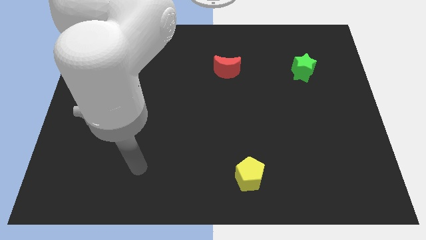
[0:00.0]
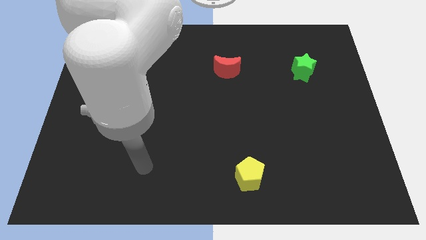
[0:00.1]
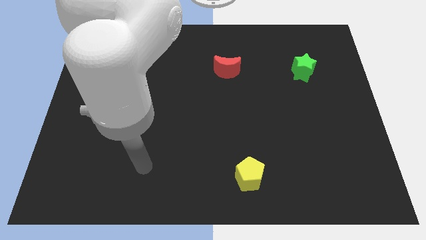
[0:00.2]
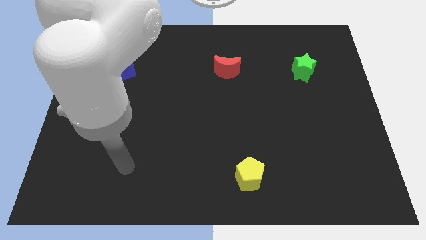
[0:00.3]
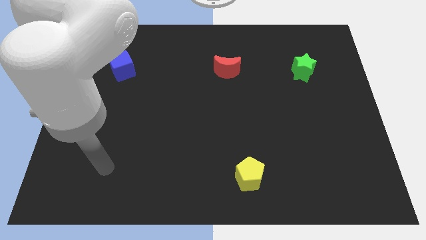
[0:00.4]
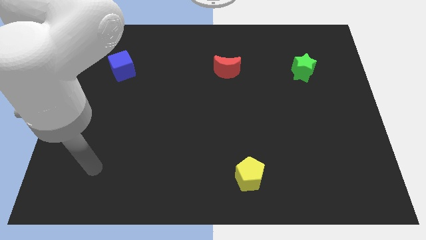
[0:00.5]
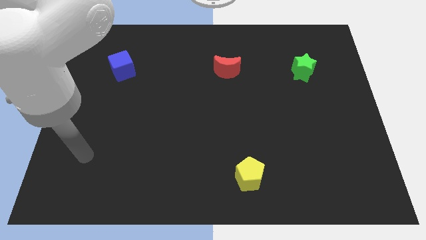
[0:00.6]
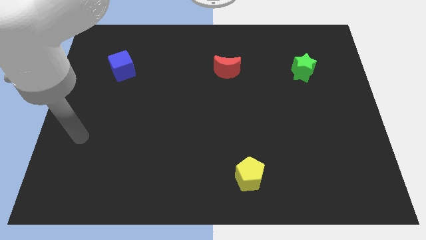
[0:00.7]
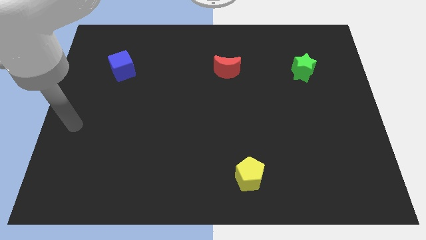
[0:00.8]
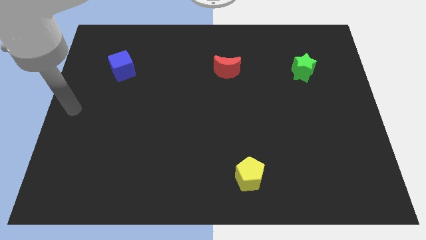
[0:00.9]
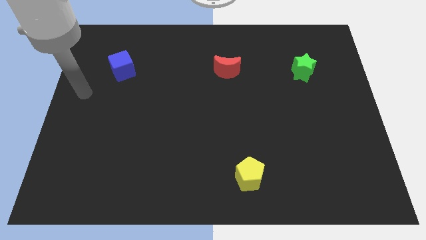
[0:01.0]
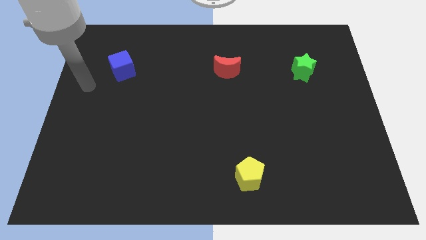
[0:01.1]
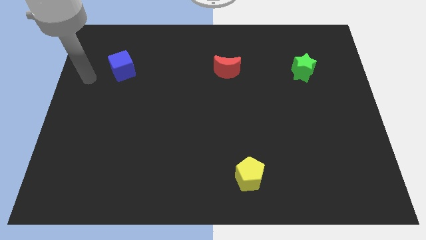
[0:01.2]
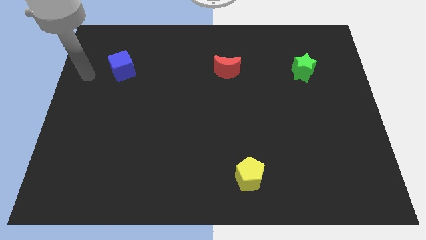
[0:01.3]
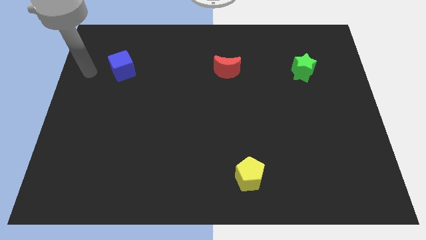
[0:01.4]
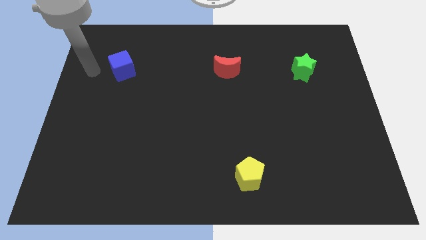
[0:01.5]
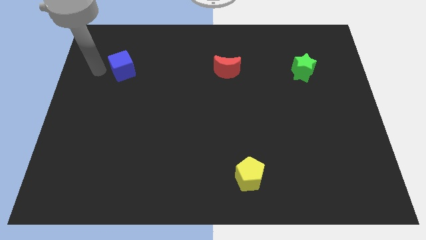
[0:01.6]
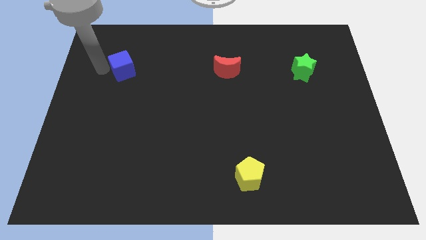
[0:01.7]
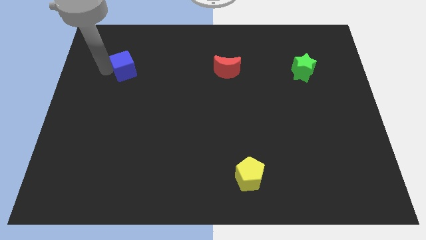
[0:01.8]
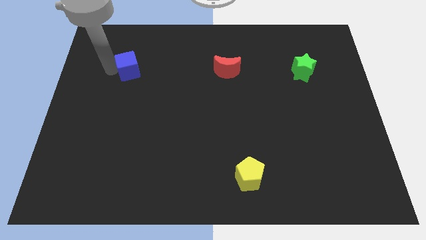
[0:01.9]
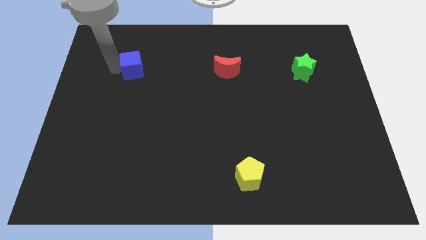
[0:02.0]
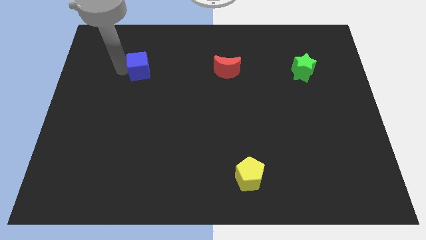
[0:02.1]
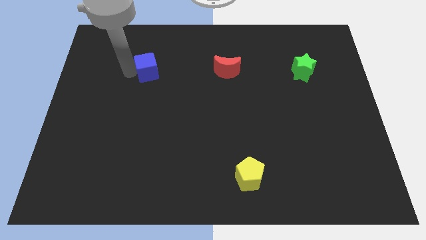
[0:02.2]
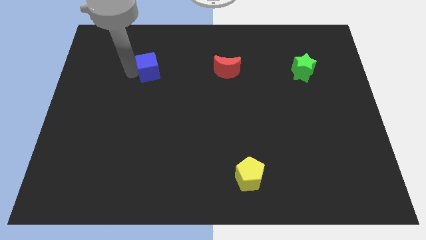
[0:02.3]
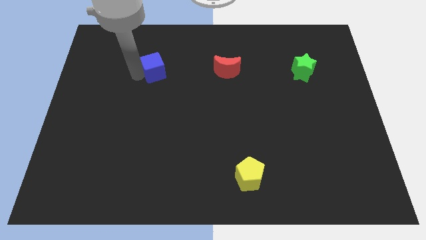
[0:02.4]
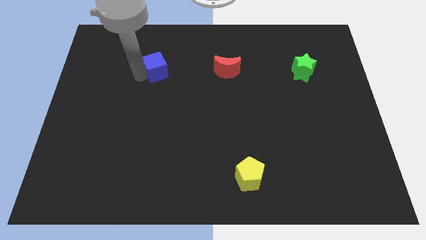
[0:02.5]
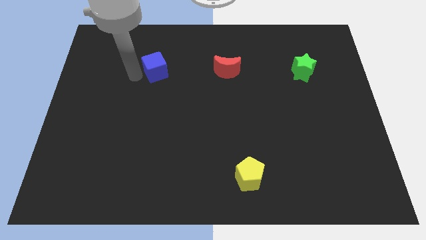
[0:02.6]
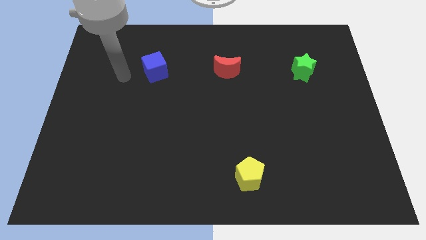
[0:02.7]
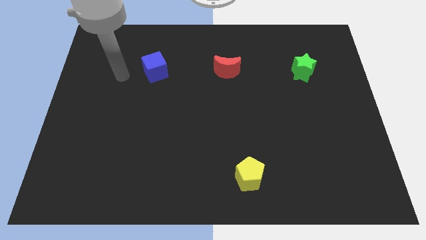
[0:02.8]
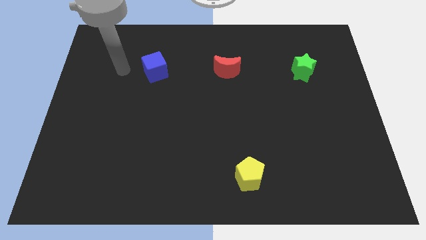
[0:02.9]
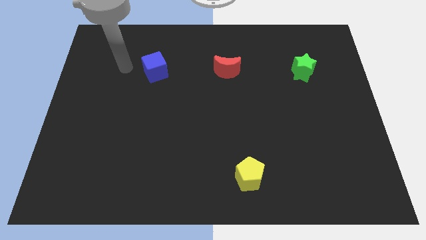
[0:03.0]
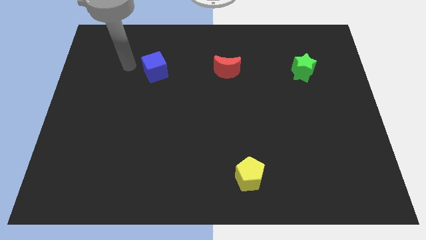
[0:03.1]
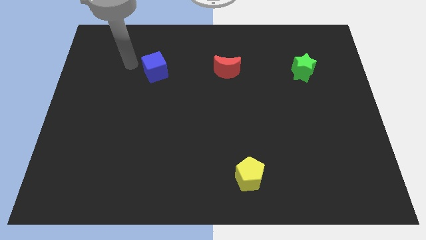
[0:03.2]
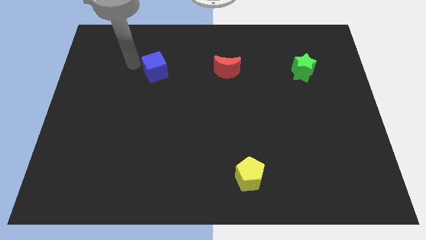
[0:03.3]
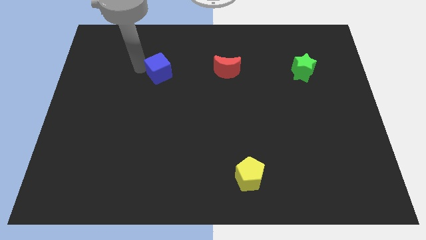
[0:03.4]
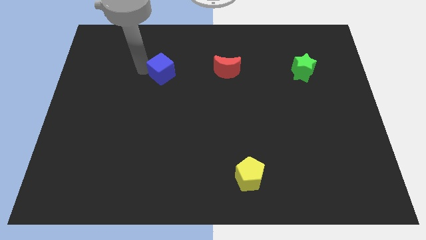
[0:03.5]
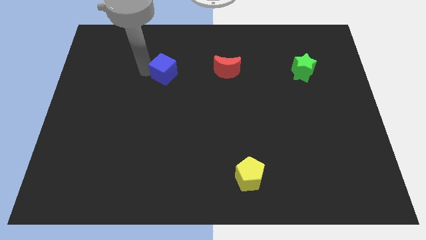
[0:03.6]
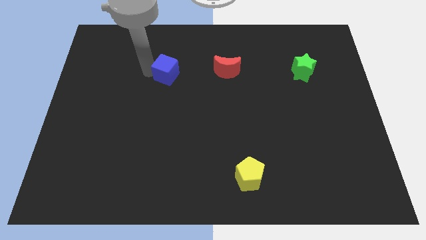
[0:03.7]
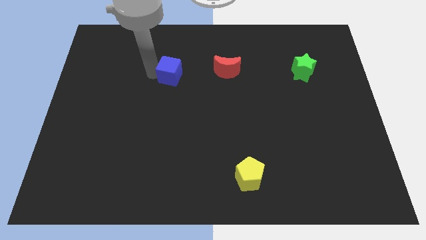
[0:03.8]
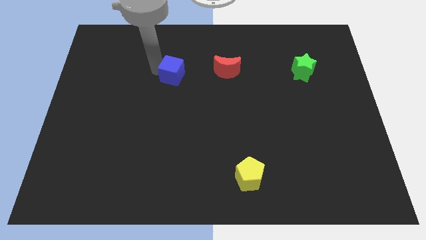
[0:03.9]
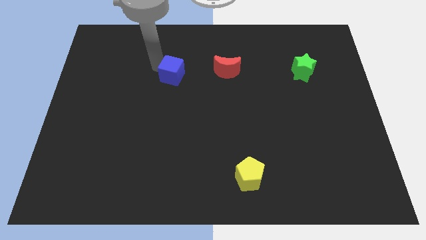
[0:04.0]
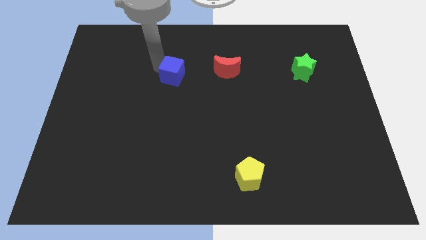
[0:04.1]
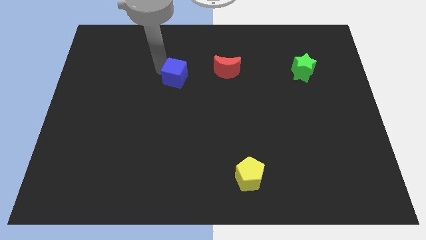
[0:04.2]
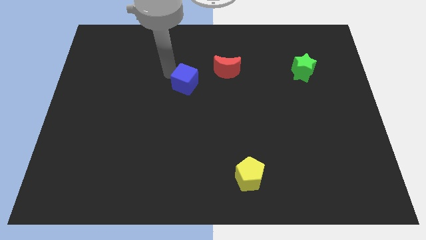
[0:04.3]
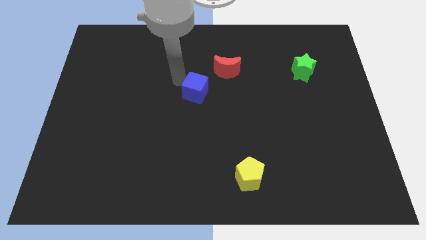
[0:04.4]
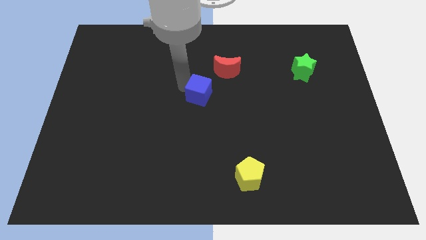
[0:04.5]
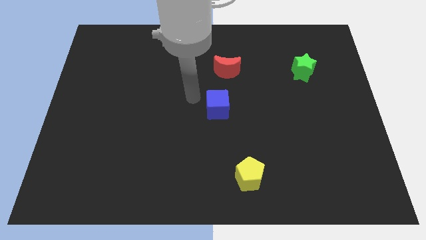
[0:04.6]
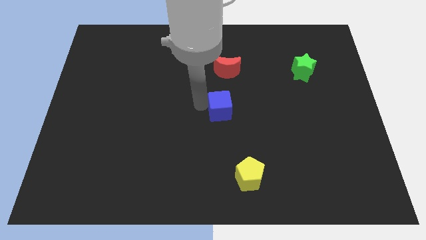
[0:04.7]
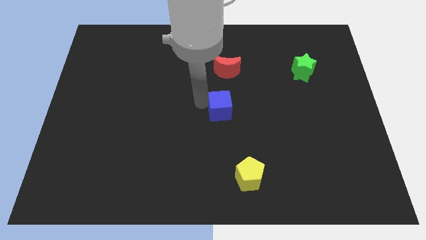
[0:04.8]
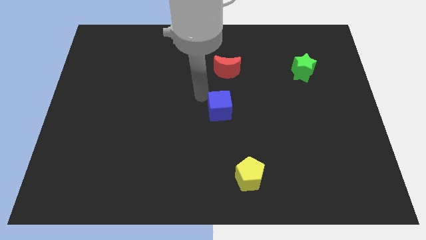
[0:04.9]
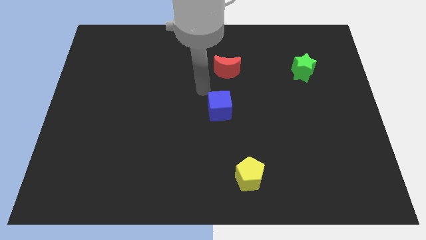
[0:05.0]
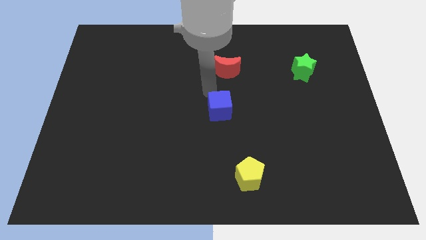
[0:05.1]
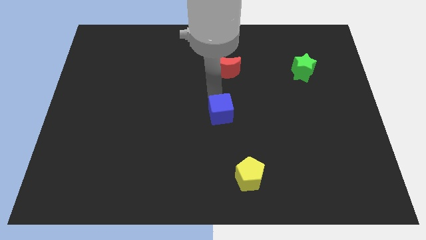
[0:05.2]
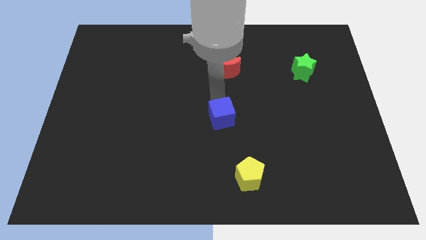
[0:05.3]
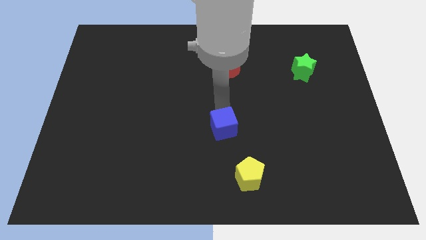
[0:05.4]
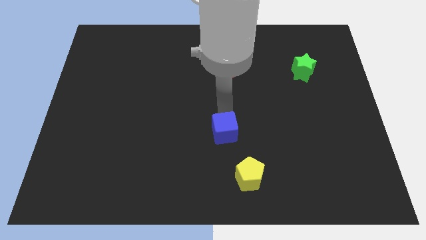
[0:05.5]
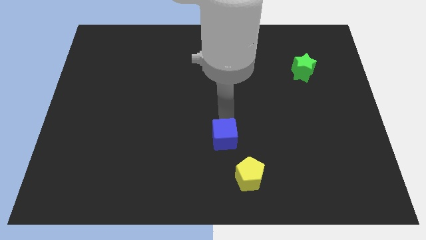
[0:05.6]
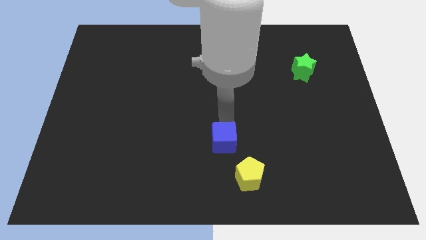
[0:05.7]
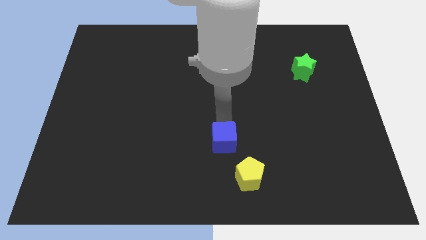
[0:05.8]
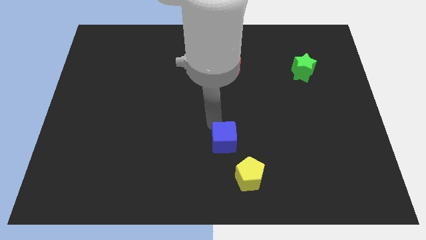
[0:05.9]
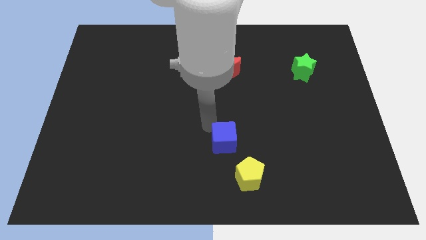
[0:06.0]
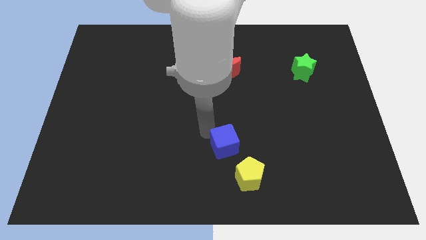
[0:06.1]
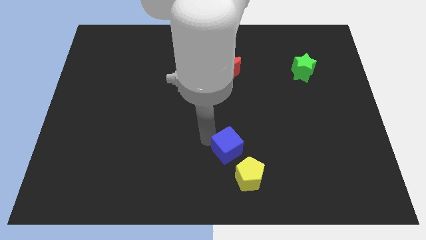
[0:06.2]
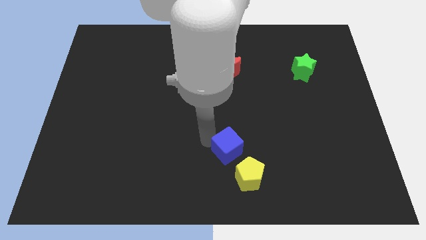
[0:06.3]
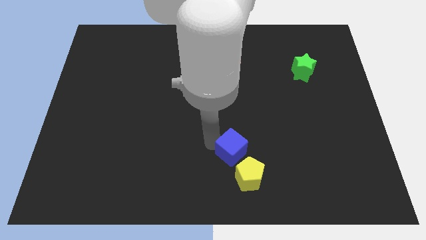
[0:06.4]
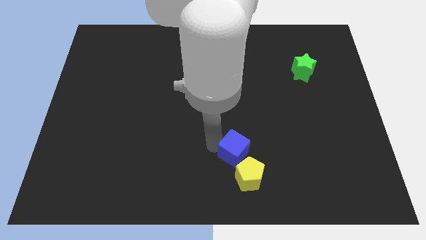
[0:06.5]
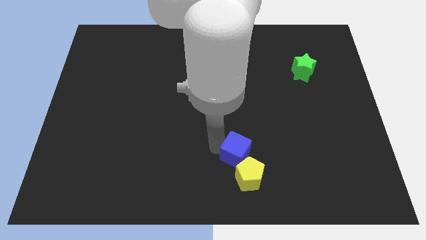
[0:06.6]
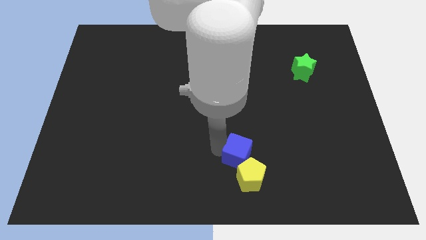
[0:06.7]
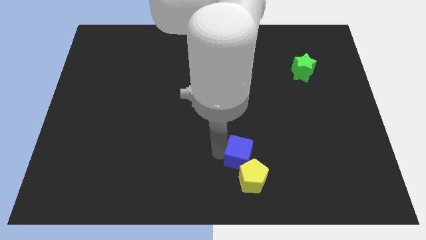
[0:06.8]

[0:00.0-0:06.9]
move the blue block to the yellow pentagon

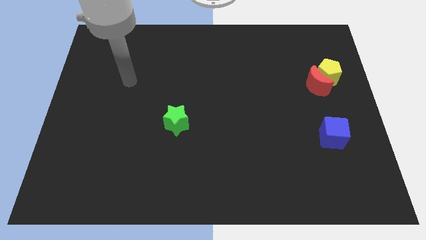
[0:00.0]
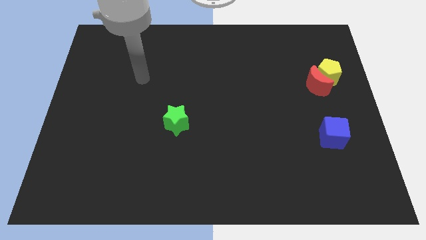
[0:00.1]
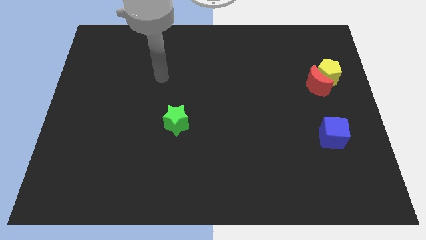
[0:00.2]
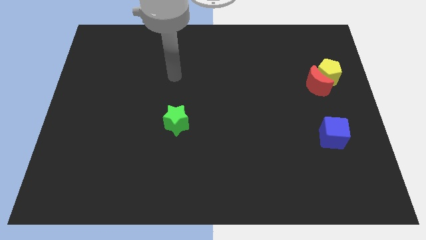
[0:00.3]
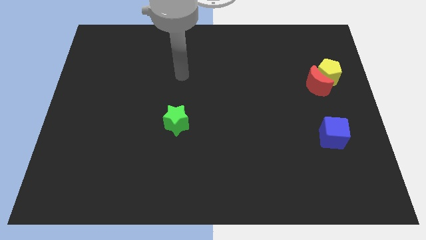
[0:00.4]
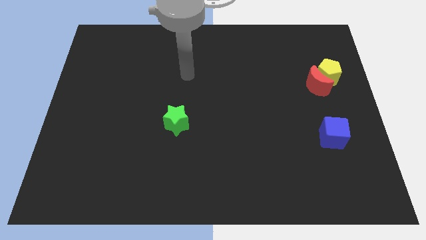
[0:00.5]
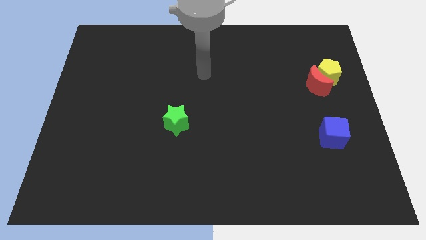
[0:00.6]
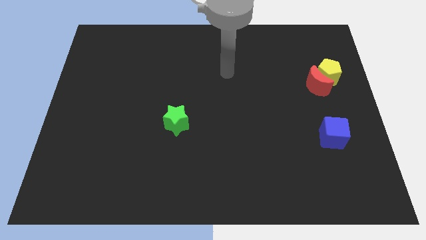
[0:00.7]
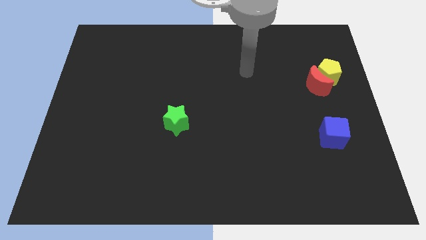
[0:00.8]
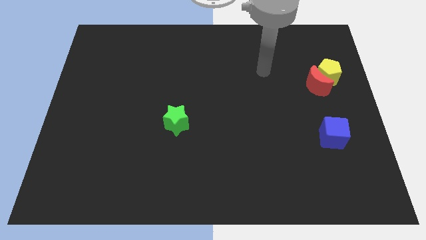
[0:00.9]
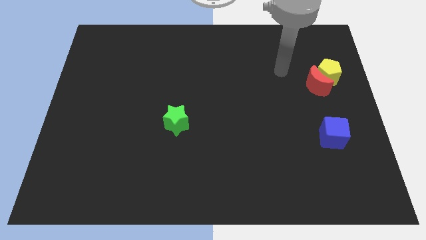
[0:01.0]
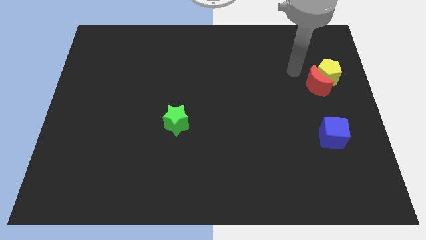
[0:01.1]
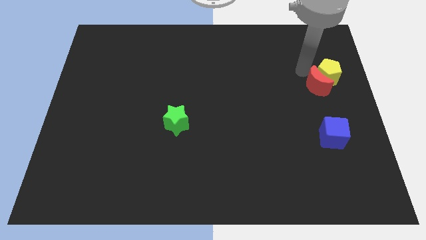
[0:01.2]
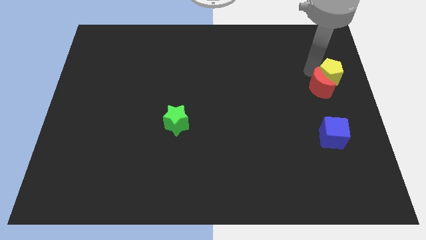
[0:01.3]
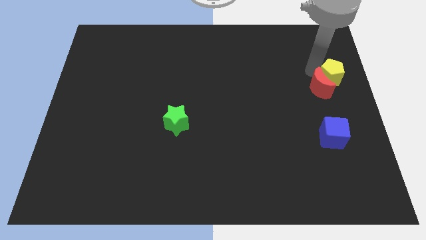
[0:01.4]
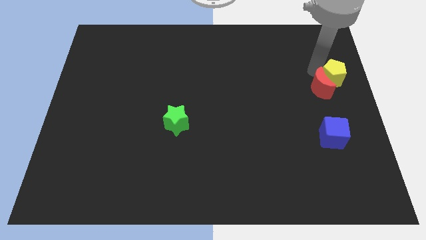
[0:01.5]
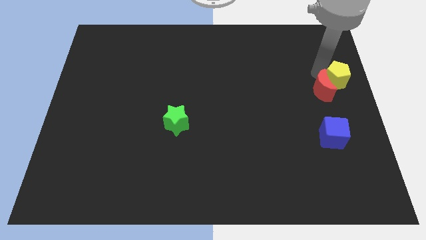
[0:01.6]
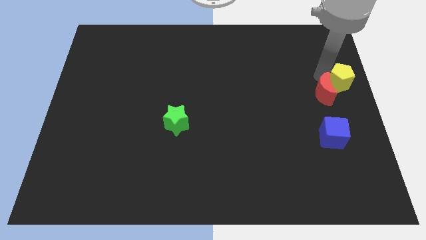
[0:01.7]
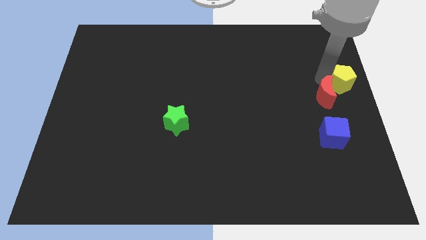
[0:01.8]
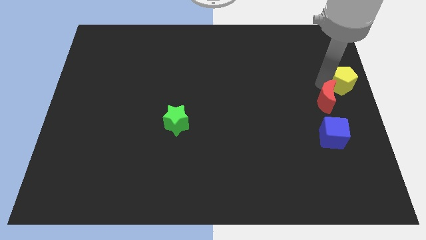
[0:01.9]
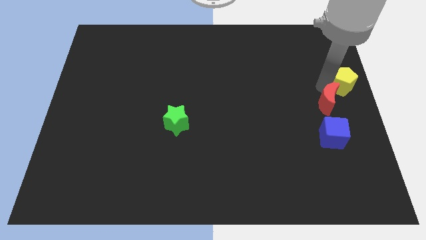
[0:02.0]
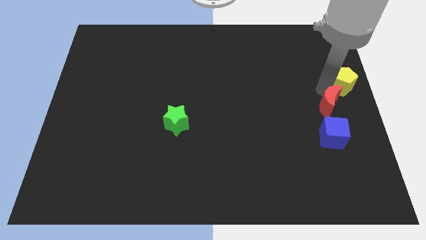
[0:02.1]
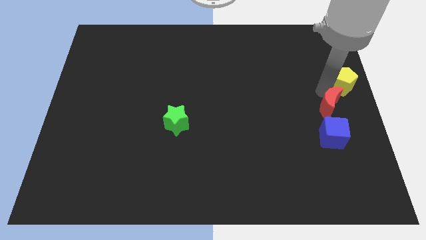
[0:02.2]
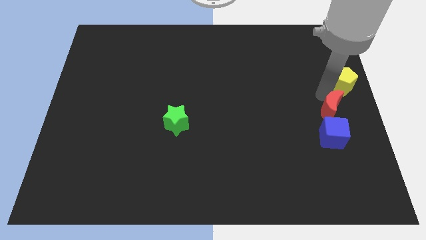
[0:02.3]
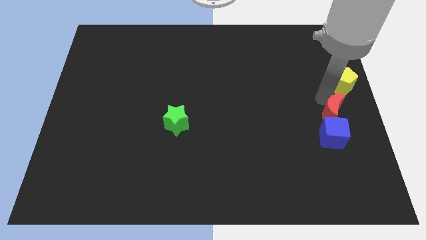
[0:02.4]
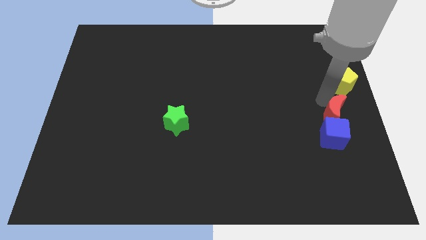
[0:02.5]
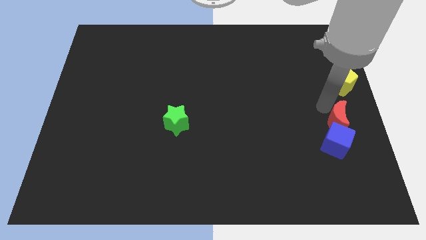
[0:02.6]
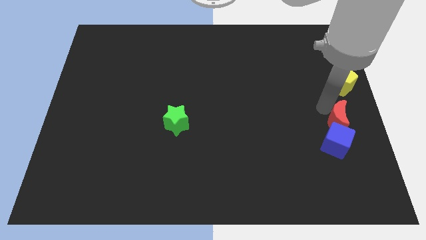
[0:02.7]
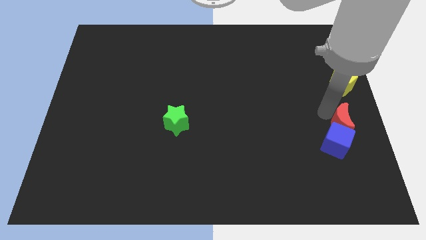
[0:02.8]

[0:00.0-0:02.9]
put the red moon next to the cube
